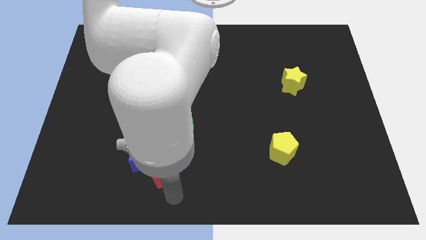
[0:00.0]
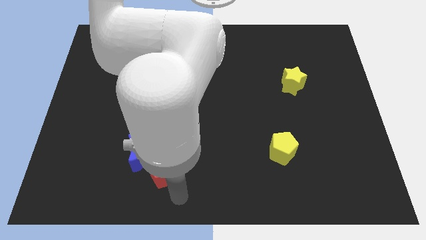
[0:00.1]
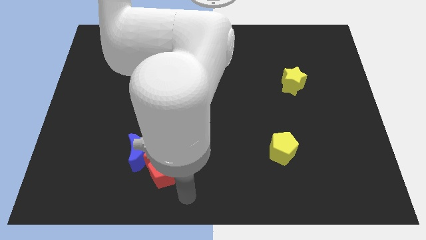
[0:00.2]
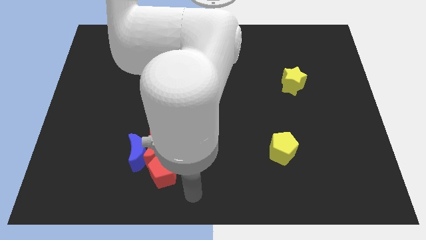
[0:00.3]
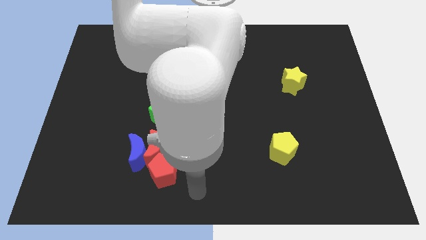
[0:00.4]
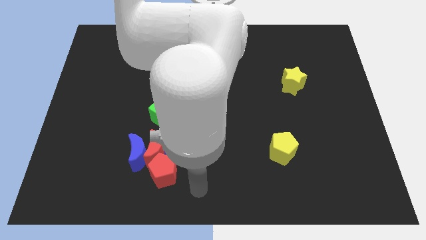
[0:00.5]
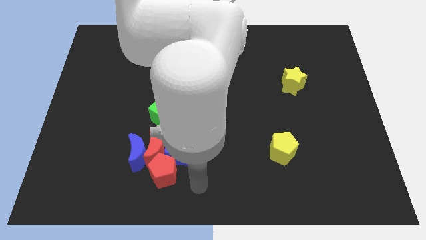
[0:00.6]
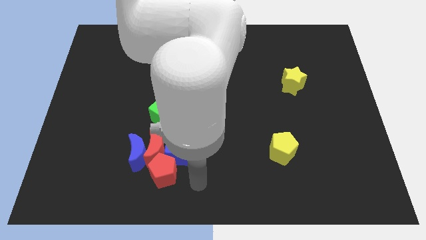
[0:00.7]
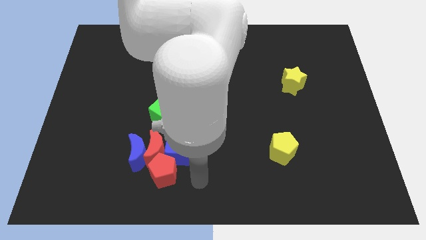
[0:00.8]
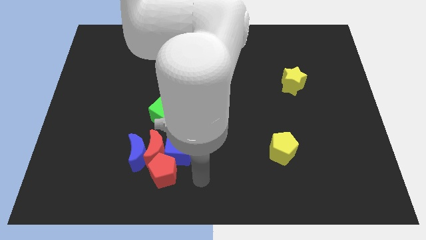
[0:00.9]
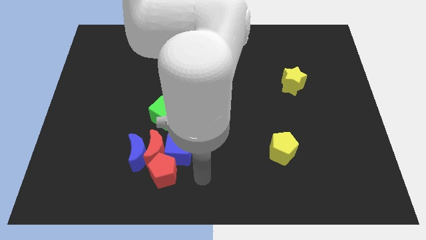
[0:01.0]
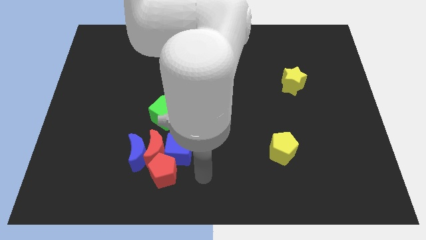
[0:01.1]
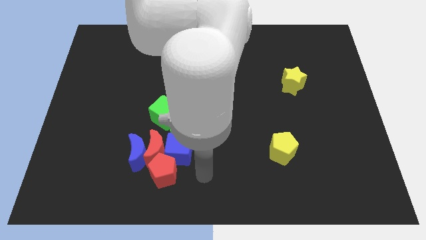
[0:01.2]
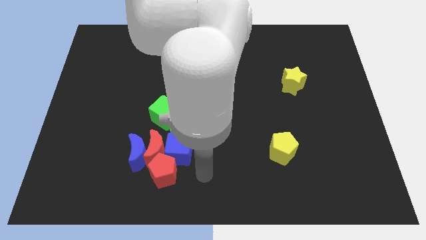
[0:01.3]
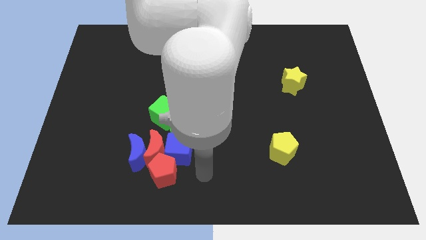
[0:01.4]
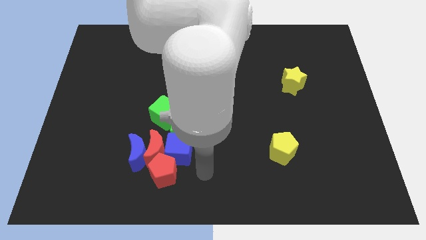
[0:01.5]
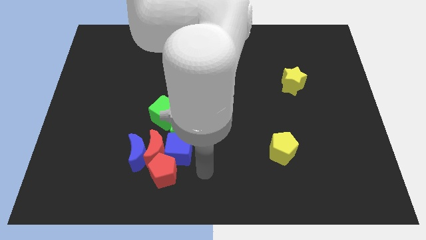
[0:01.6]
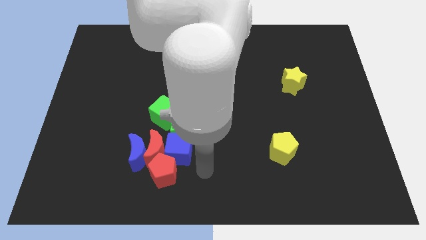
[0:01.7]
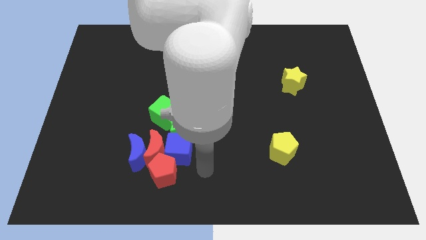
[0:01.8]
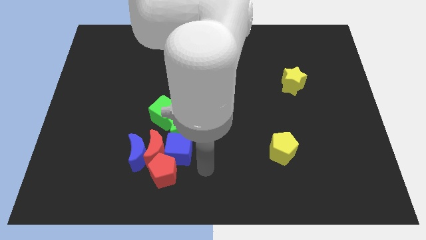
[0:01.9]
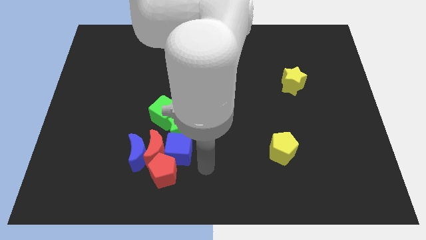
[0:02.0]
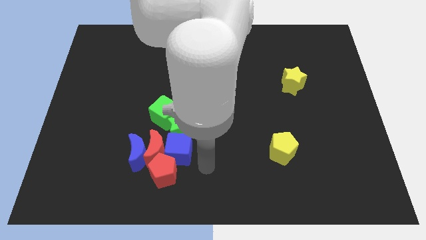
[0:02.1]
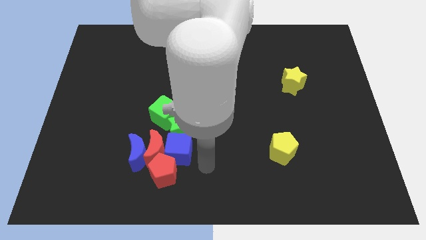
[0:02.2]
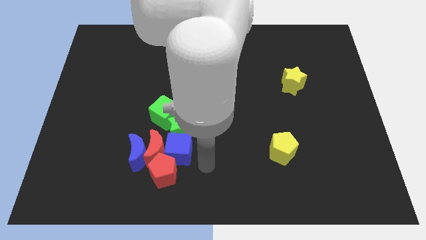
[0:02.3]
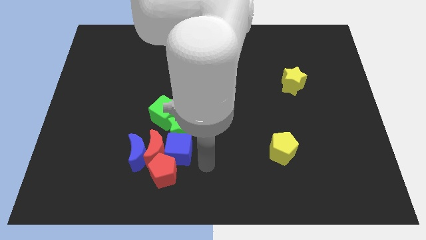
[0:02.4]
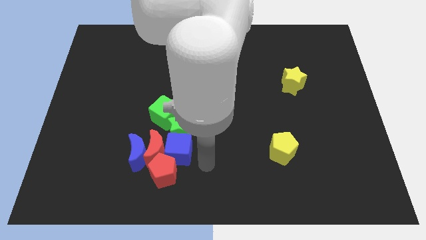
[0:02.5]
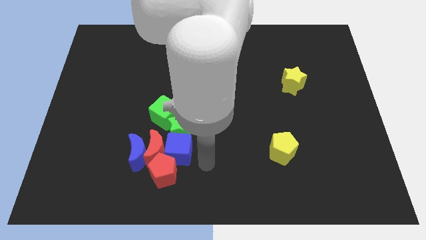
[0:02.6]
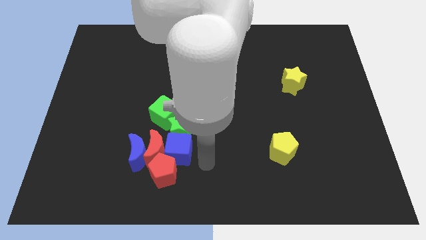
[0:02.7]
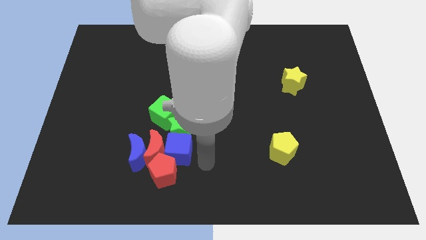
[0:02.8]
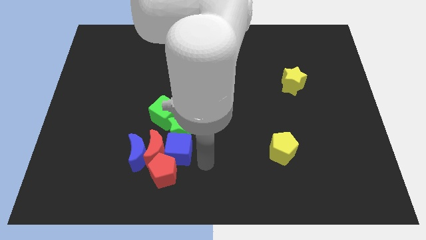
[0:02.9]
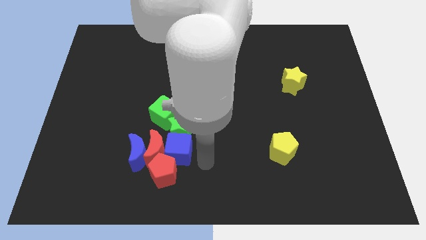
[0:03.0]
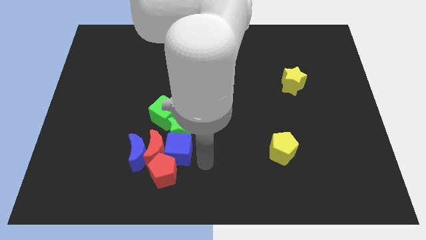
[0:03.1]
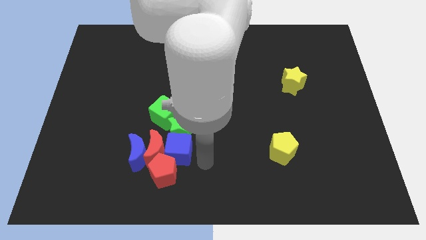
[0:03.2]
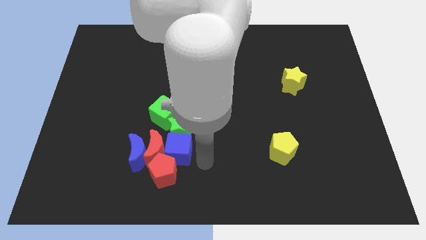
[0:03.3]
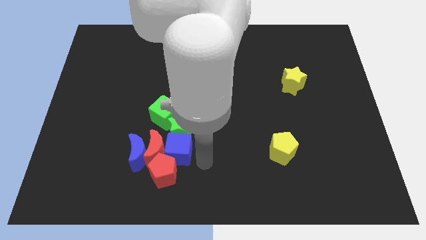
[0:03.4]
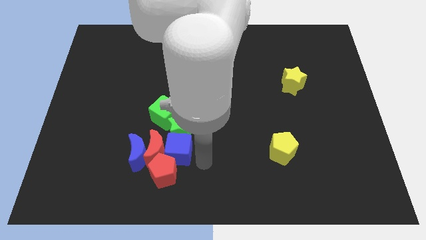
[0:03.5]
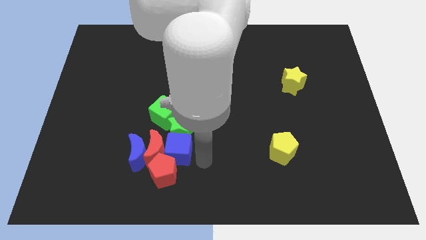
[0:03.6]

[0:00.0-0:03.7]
place your arm right to the blue cube

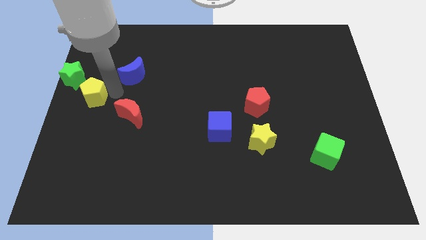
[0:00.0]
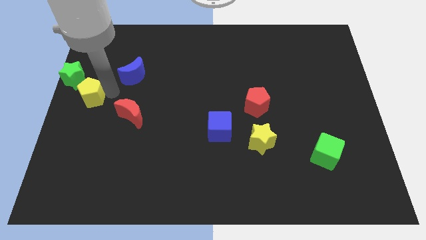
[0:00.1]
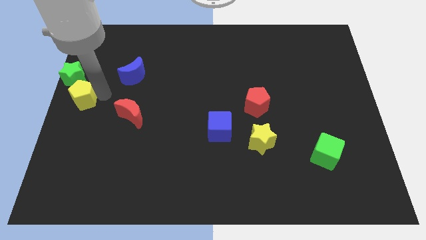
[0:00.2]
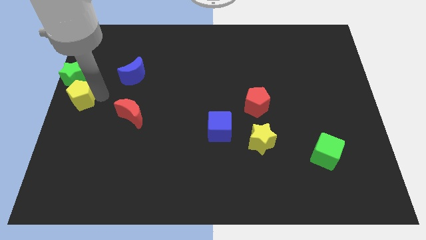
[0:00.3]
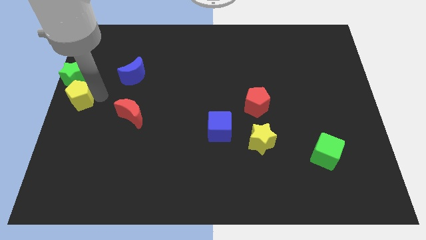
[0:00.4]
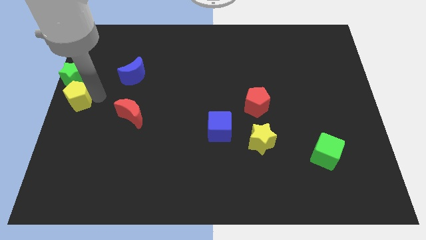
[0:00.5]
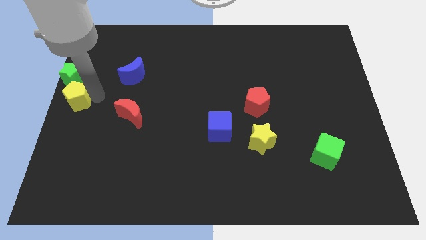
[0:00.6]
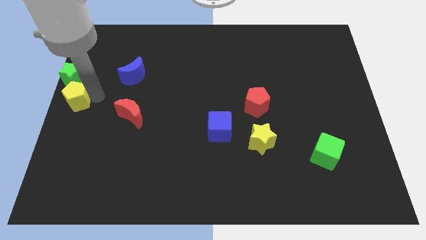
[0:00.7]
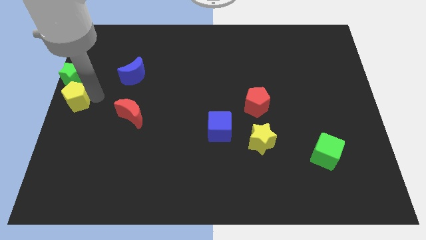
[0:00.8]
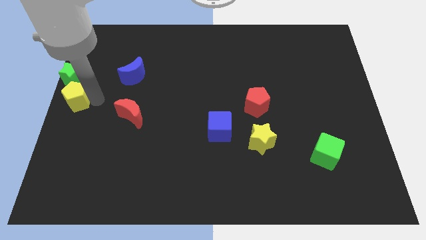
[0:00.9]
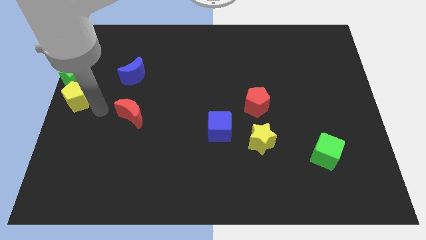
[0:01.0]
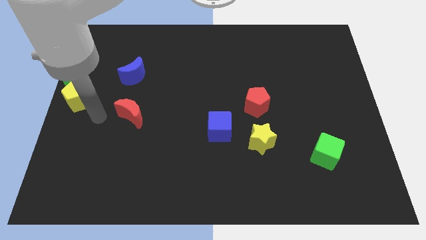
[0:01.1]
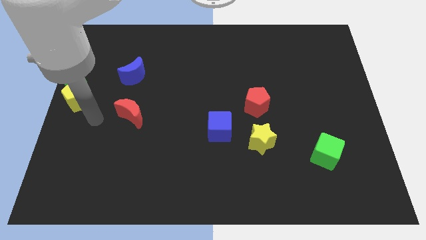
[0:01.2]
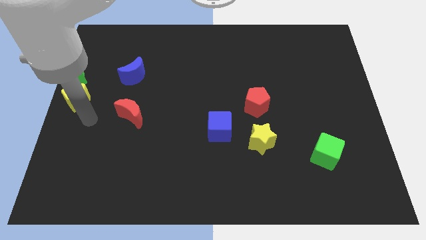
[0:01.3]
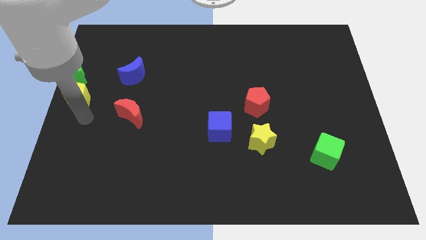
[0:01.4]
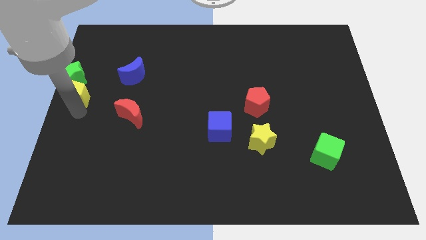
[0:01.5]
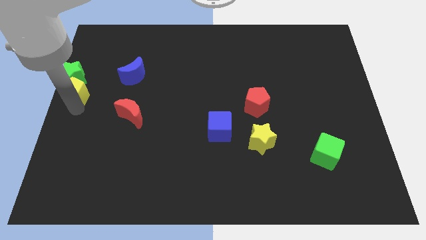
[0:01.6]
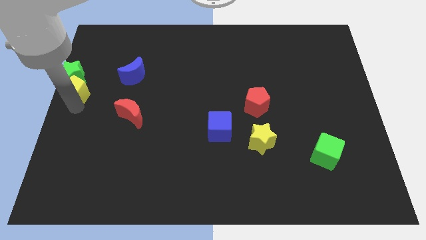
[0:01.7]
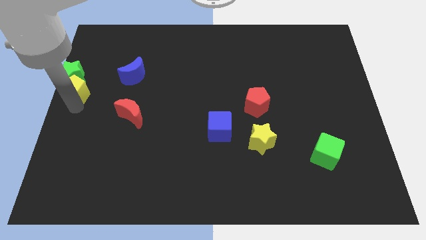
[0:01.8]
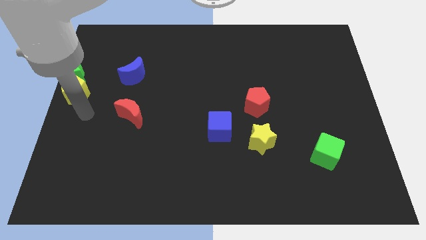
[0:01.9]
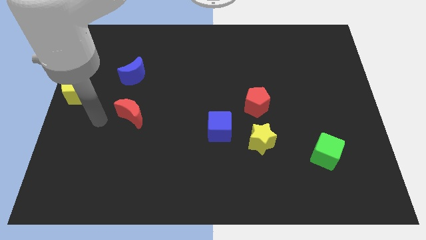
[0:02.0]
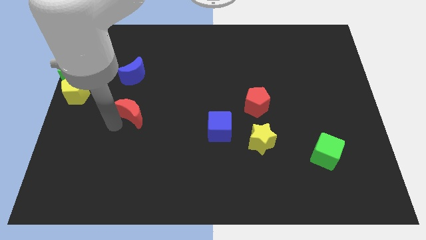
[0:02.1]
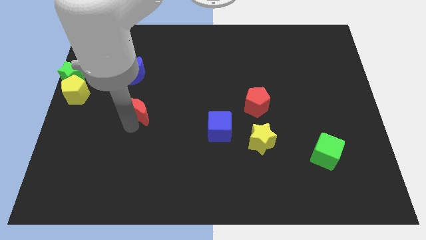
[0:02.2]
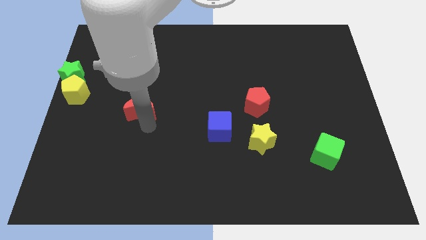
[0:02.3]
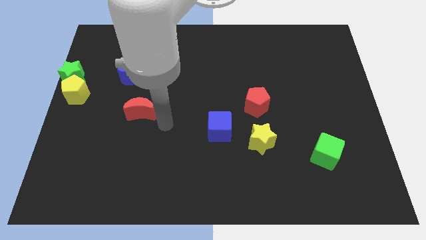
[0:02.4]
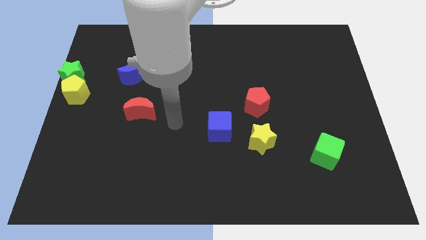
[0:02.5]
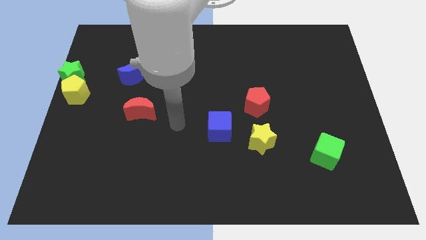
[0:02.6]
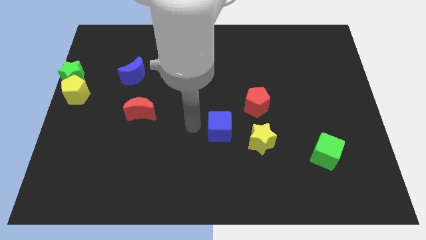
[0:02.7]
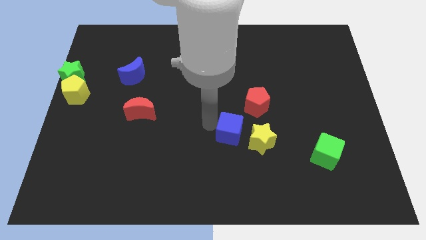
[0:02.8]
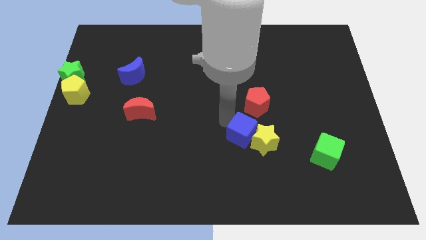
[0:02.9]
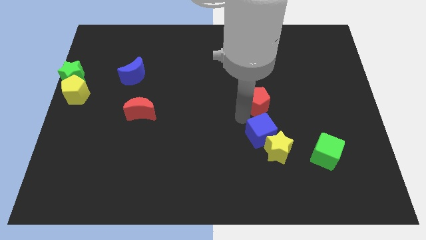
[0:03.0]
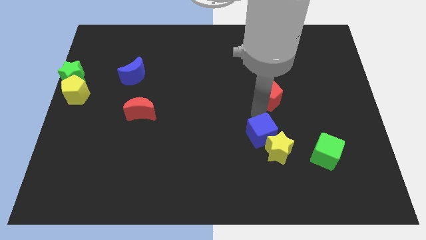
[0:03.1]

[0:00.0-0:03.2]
move yellow star below the green star

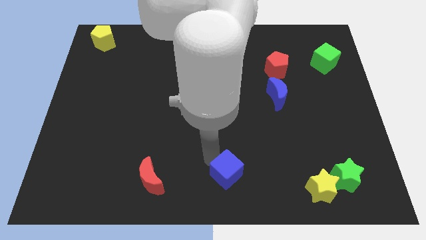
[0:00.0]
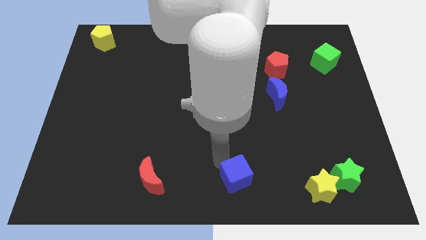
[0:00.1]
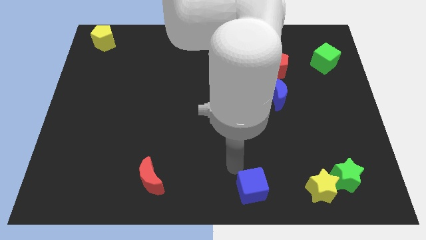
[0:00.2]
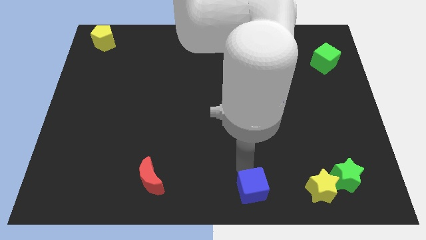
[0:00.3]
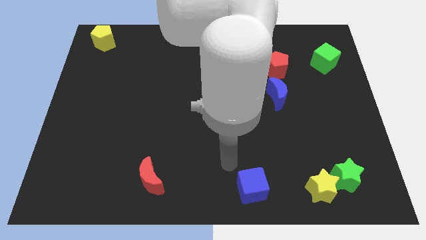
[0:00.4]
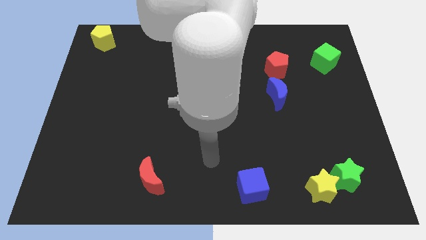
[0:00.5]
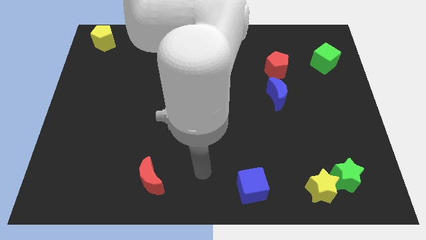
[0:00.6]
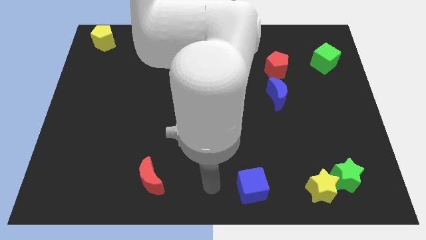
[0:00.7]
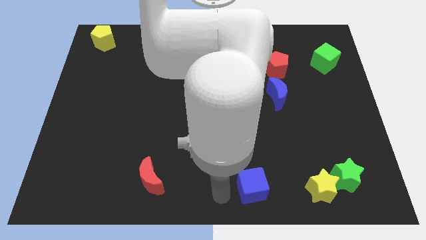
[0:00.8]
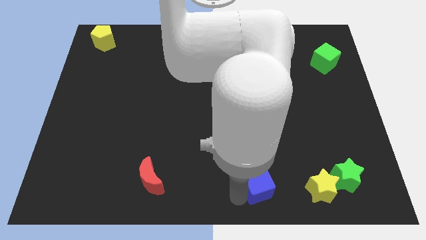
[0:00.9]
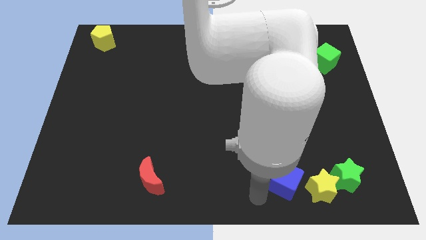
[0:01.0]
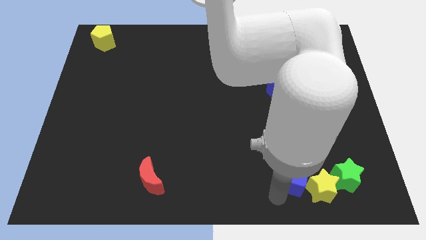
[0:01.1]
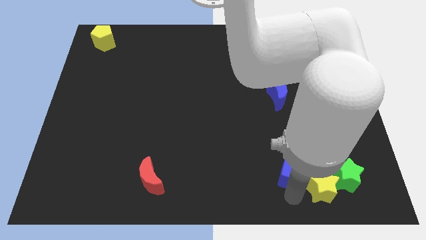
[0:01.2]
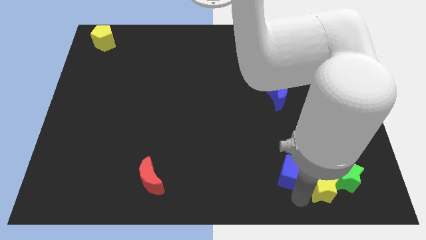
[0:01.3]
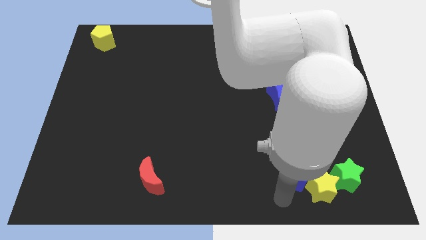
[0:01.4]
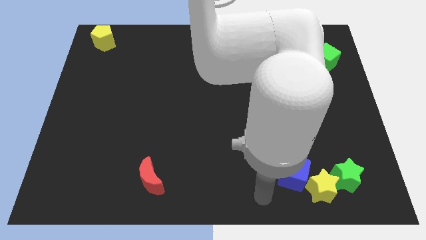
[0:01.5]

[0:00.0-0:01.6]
move the blue cube towards the yellow star

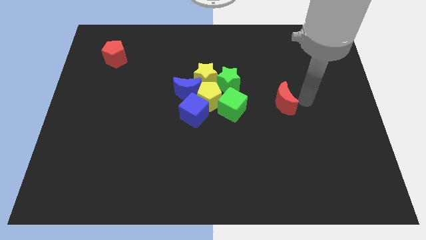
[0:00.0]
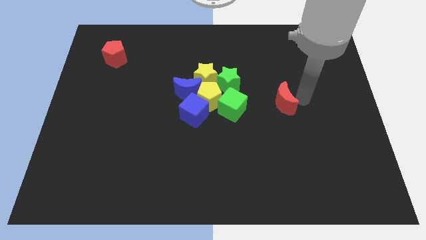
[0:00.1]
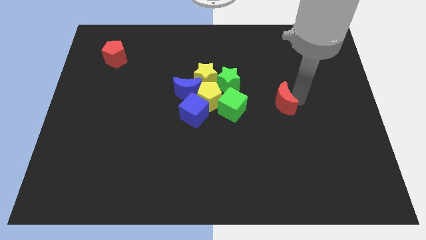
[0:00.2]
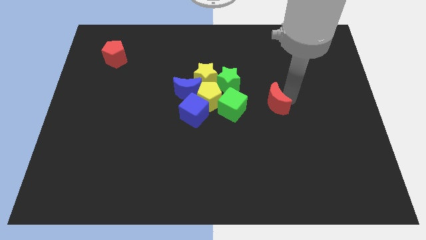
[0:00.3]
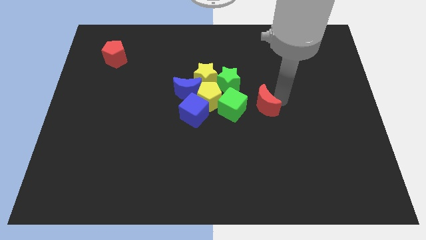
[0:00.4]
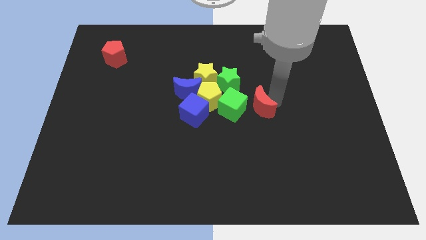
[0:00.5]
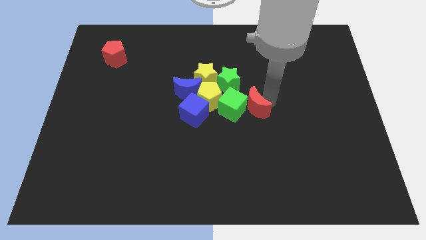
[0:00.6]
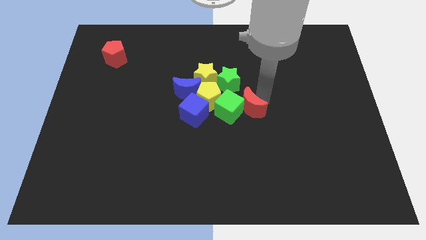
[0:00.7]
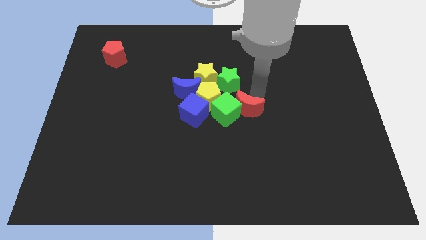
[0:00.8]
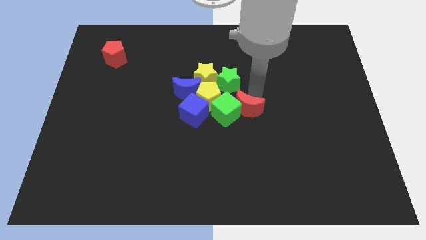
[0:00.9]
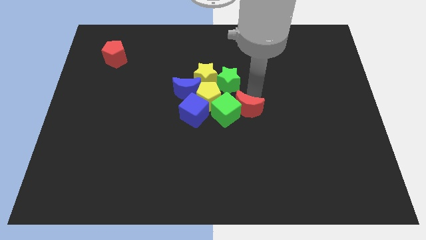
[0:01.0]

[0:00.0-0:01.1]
make a group of all the blocks except red pentagon
